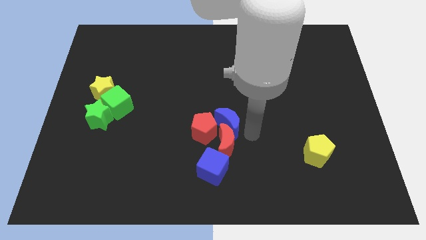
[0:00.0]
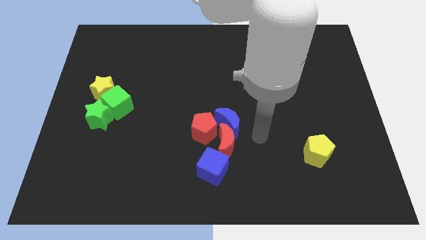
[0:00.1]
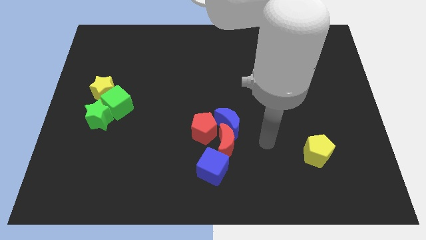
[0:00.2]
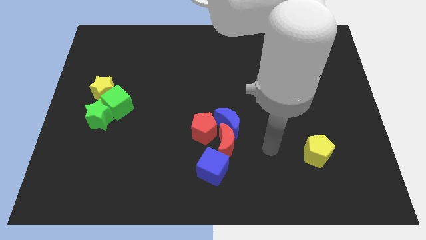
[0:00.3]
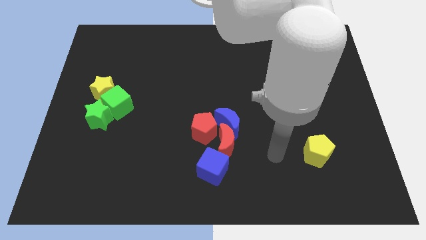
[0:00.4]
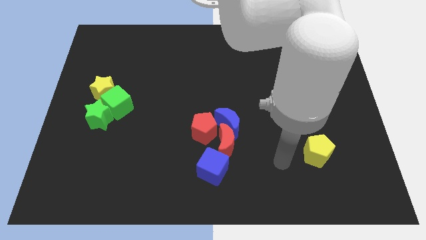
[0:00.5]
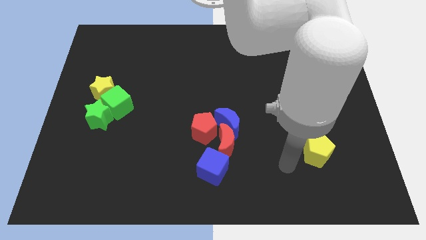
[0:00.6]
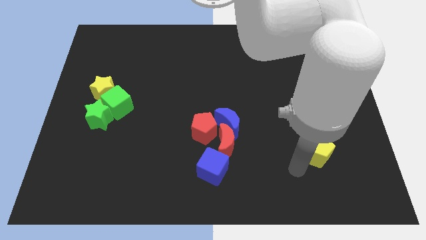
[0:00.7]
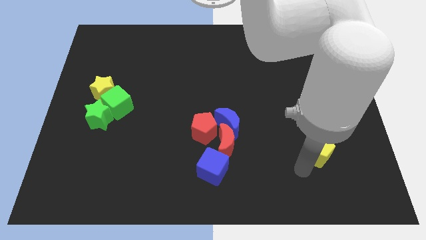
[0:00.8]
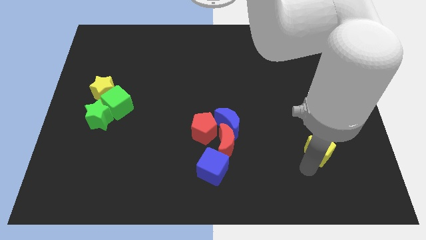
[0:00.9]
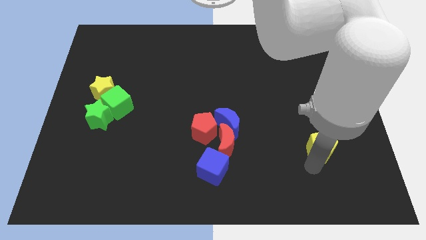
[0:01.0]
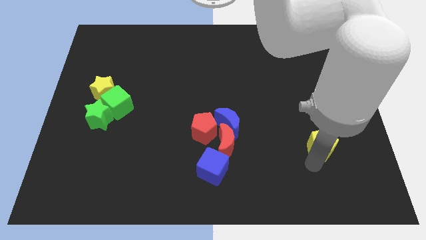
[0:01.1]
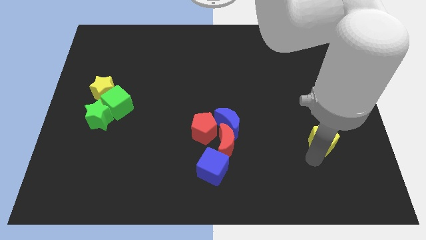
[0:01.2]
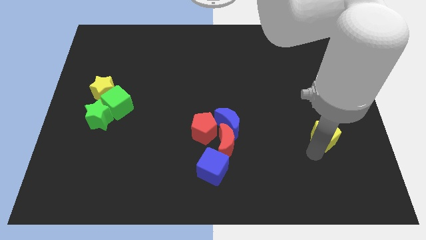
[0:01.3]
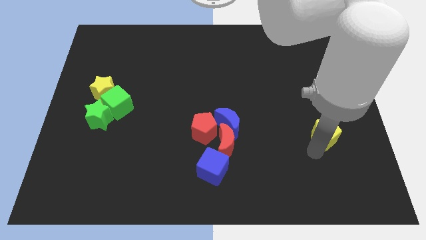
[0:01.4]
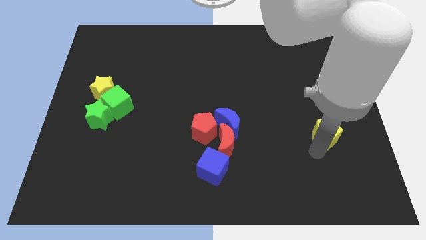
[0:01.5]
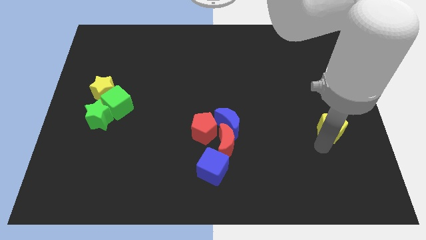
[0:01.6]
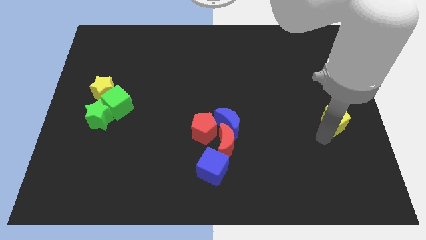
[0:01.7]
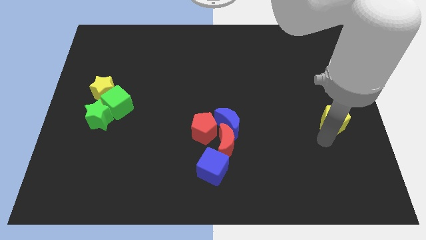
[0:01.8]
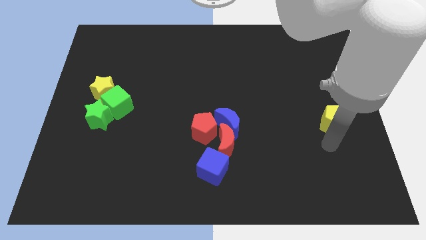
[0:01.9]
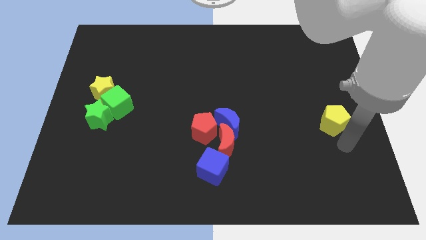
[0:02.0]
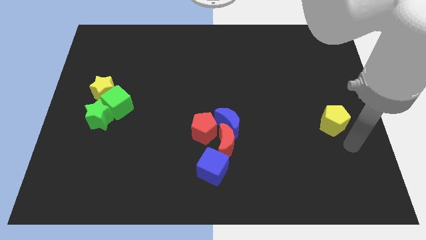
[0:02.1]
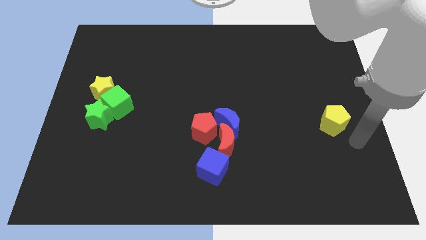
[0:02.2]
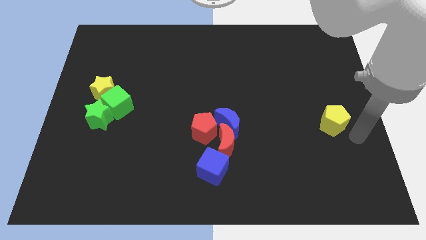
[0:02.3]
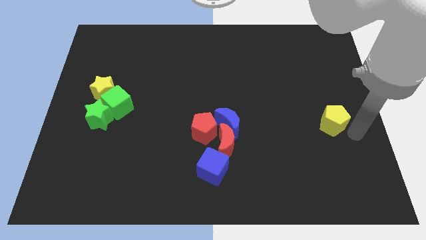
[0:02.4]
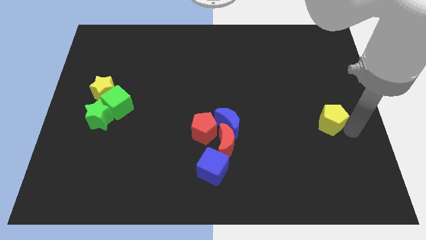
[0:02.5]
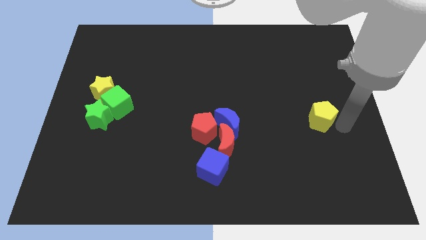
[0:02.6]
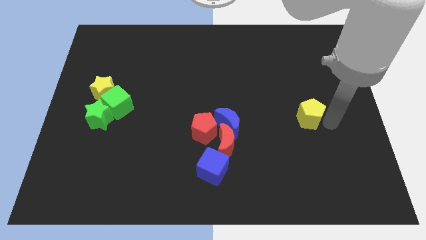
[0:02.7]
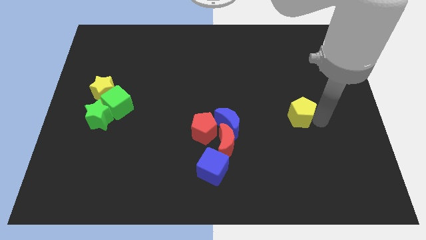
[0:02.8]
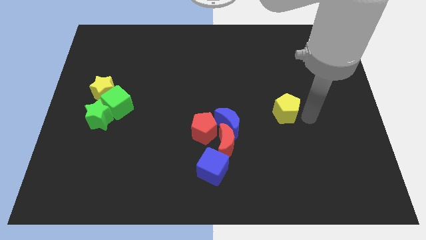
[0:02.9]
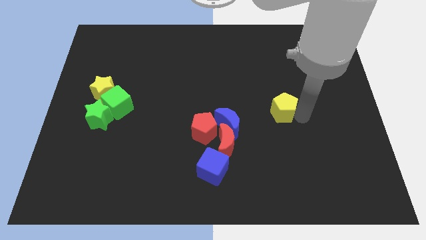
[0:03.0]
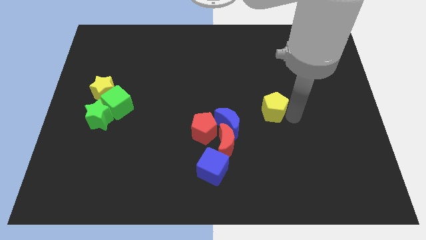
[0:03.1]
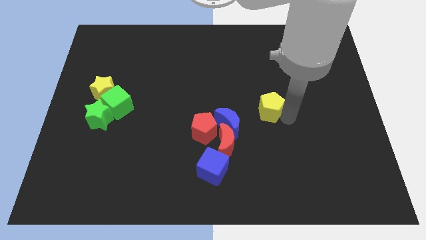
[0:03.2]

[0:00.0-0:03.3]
drag the yellow pentagon towards the center of the board

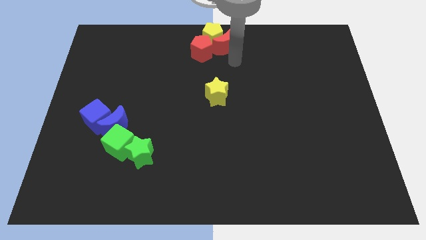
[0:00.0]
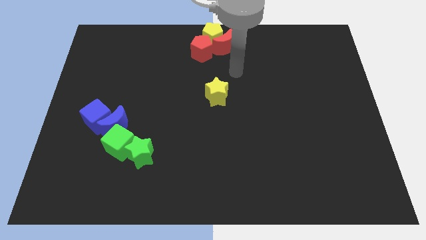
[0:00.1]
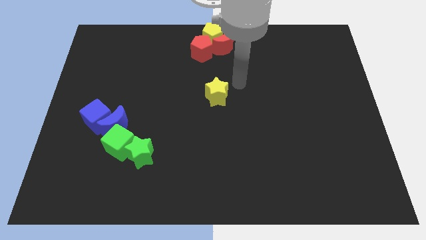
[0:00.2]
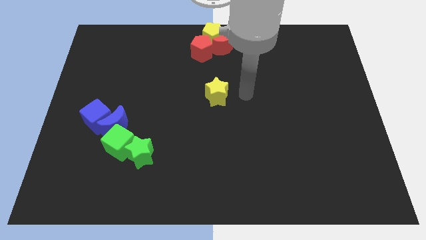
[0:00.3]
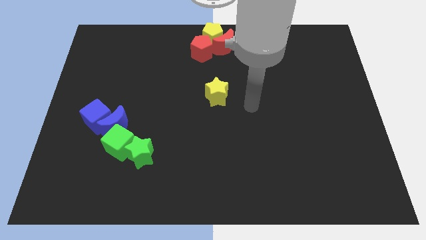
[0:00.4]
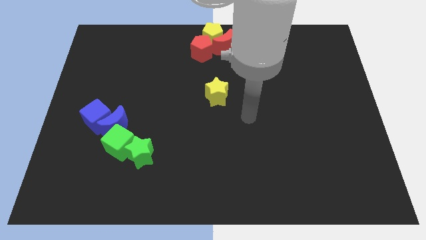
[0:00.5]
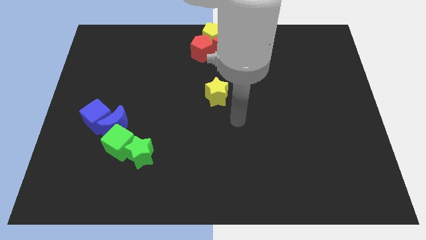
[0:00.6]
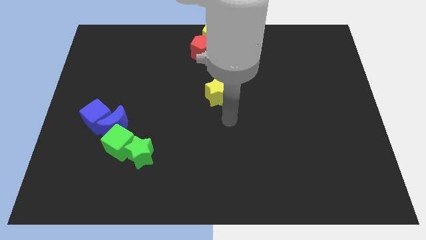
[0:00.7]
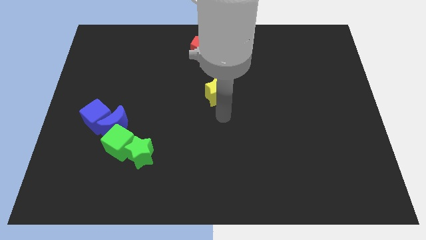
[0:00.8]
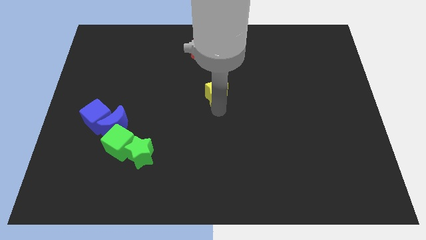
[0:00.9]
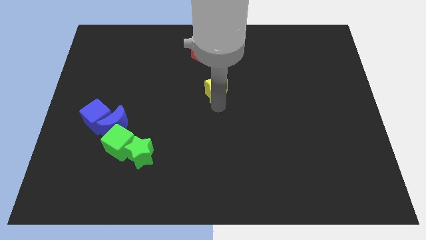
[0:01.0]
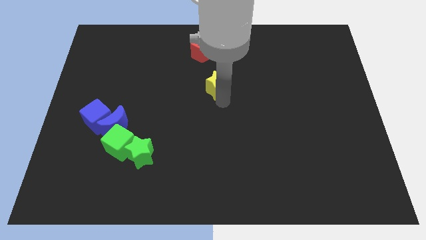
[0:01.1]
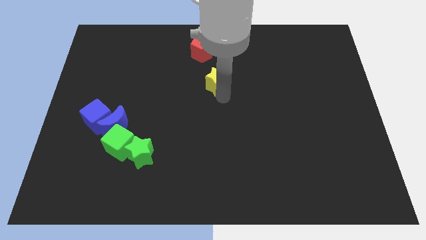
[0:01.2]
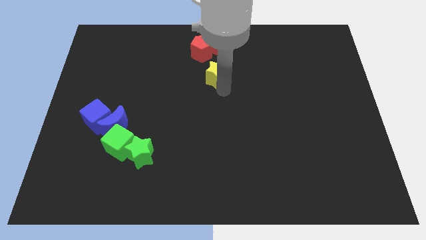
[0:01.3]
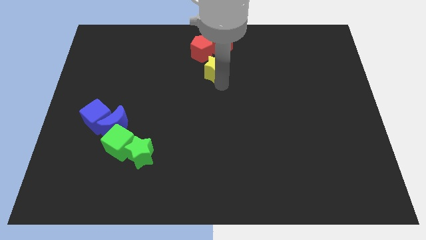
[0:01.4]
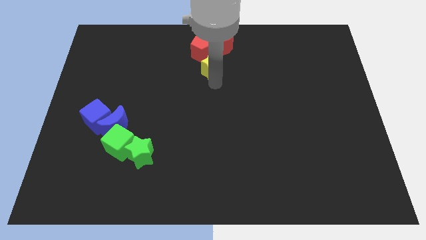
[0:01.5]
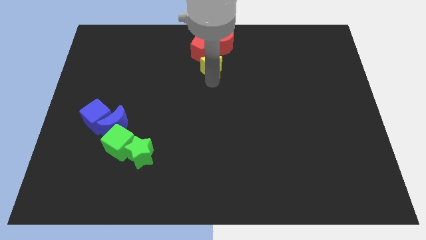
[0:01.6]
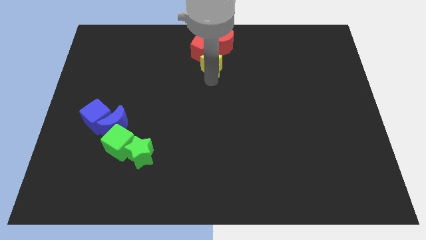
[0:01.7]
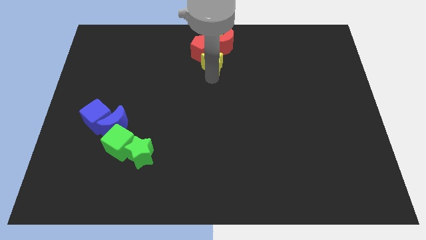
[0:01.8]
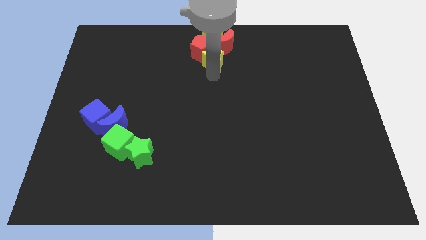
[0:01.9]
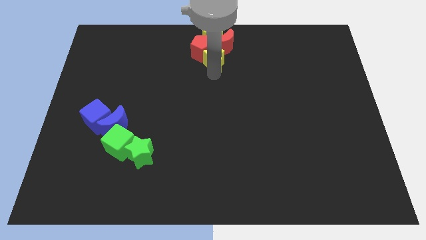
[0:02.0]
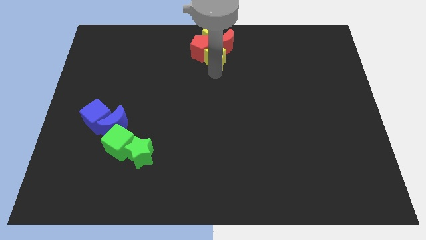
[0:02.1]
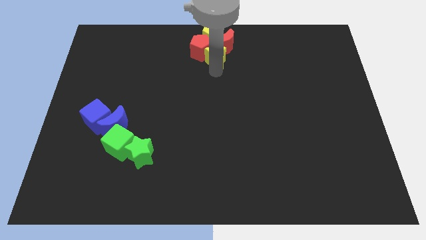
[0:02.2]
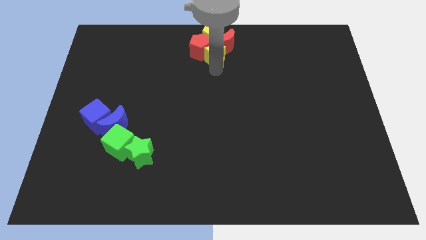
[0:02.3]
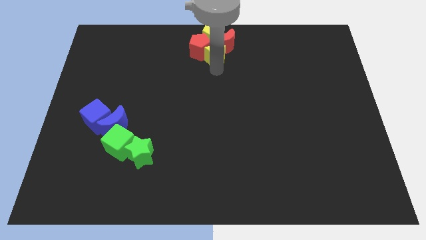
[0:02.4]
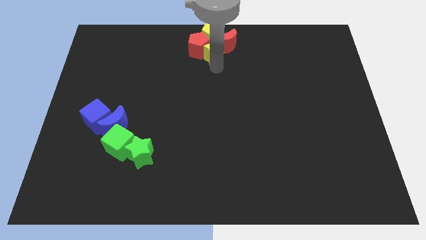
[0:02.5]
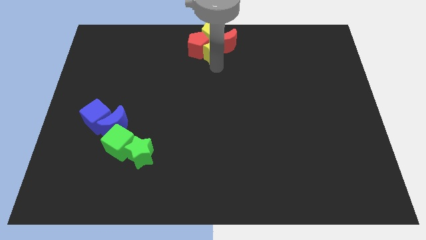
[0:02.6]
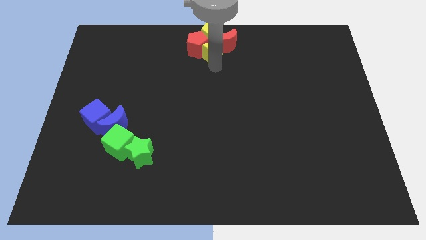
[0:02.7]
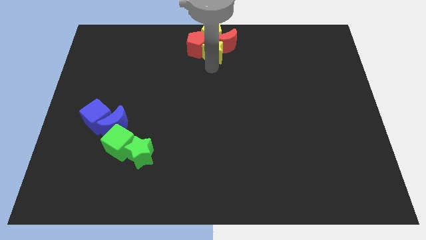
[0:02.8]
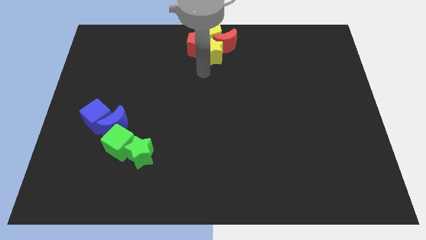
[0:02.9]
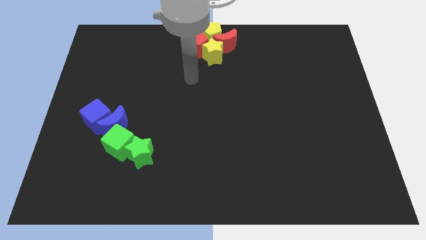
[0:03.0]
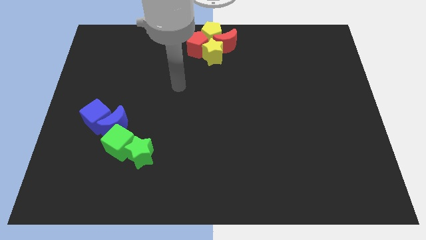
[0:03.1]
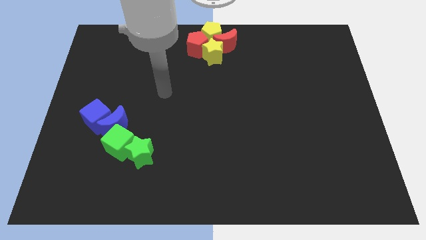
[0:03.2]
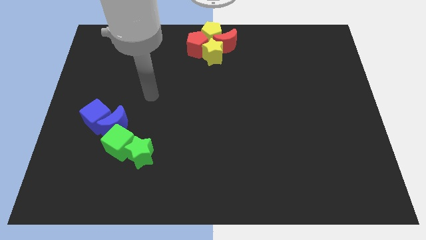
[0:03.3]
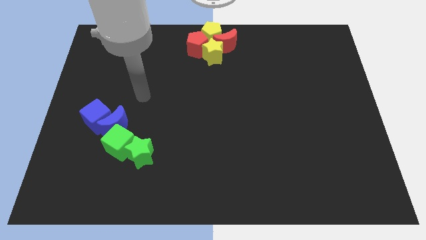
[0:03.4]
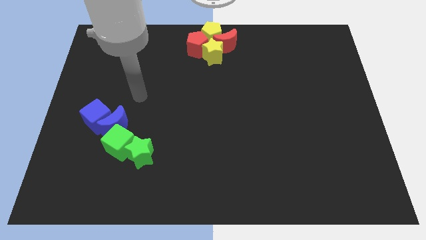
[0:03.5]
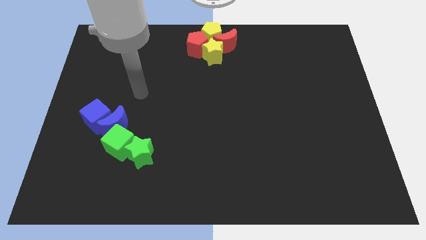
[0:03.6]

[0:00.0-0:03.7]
place the yellow star down to the yellow pentagon

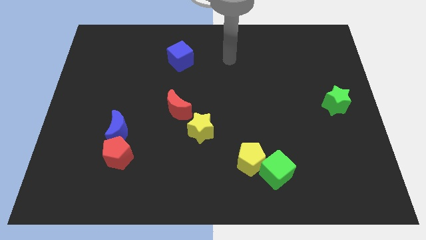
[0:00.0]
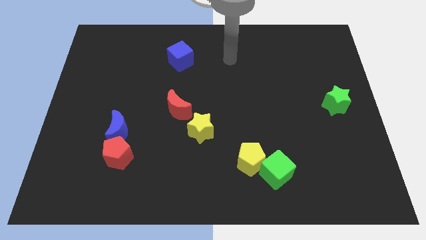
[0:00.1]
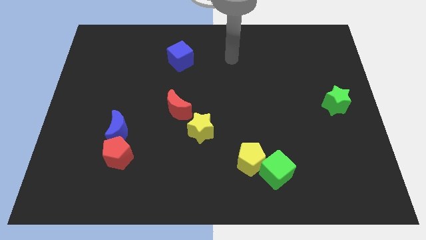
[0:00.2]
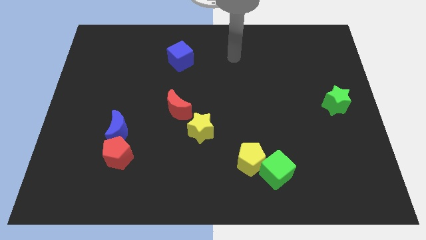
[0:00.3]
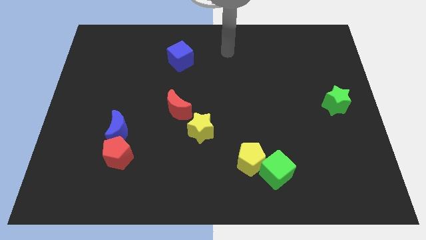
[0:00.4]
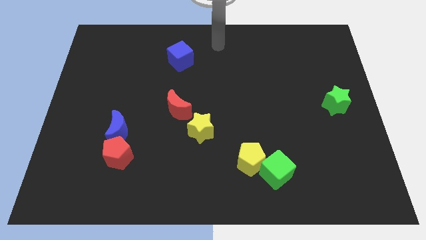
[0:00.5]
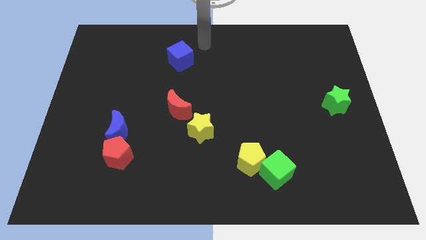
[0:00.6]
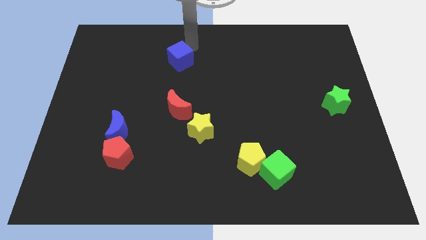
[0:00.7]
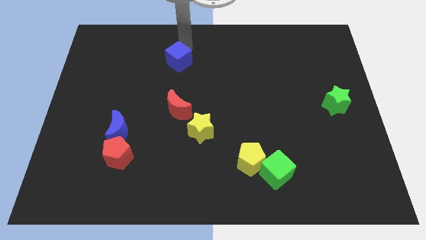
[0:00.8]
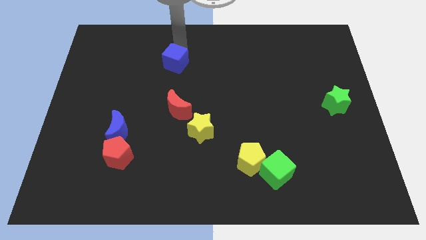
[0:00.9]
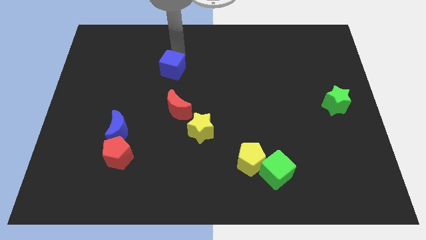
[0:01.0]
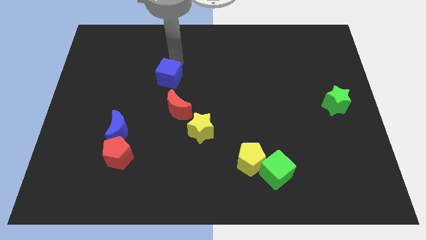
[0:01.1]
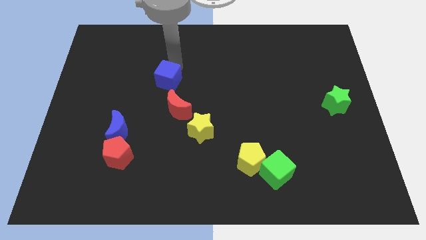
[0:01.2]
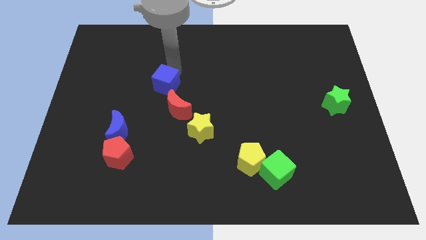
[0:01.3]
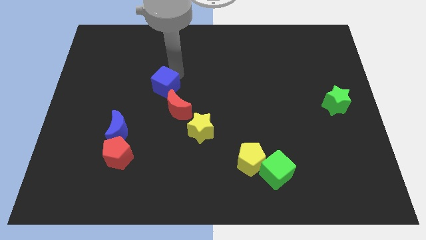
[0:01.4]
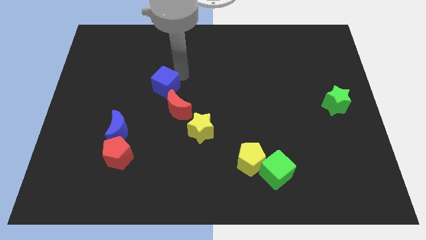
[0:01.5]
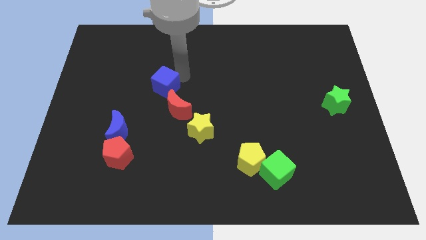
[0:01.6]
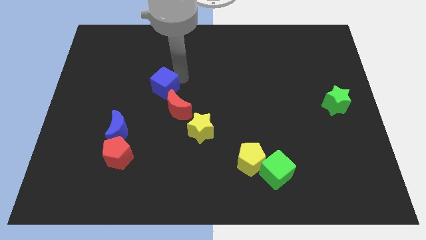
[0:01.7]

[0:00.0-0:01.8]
push the blue cube close to the red crescent

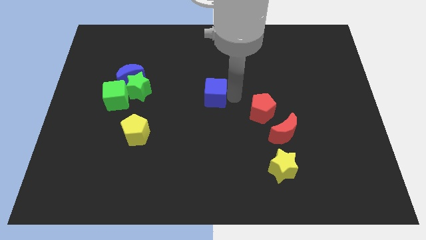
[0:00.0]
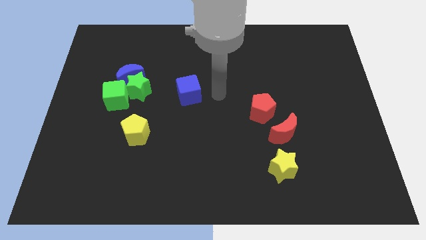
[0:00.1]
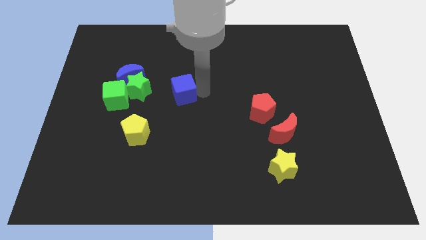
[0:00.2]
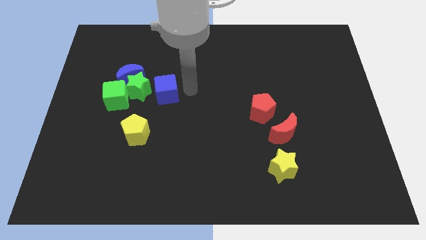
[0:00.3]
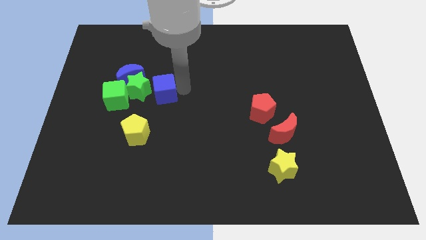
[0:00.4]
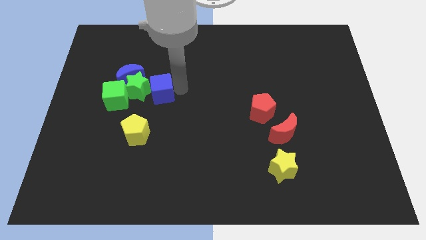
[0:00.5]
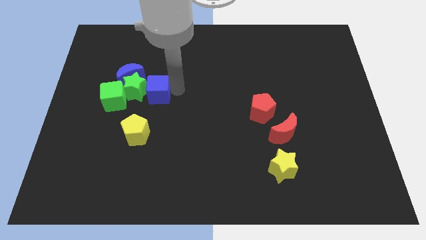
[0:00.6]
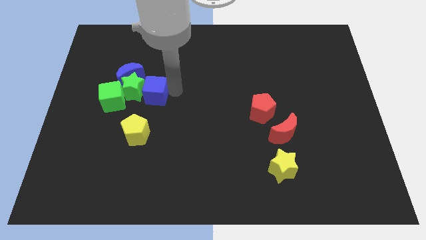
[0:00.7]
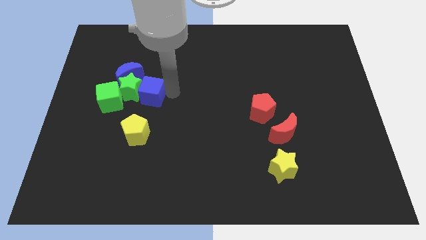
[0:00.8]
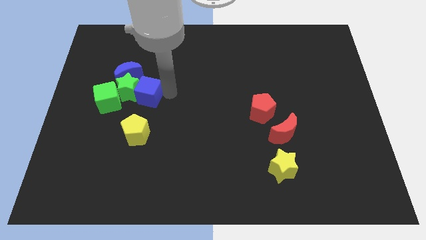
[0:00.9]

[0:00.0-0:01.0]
drag the blue cube close to the green star
